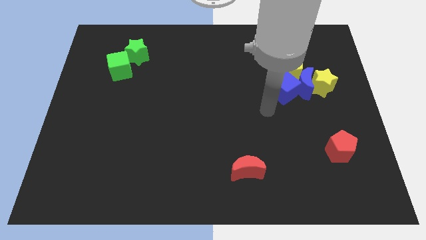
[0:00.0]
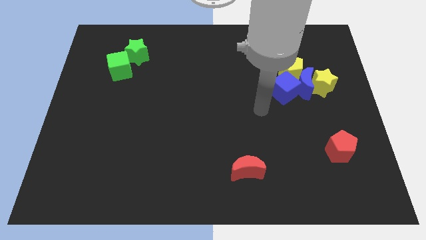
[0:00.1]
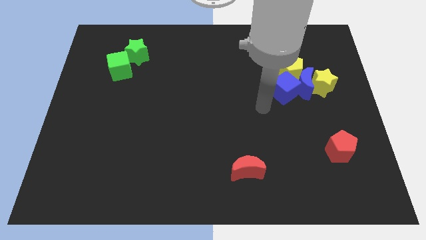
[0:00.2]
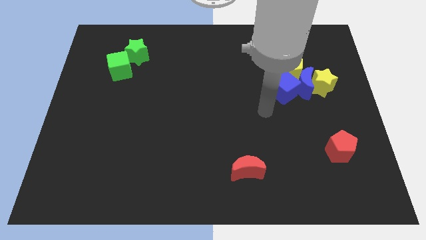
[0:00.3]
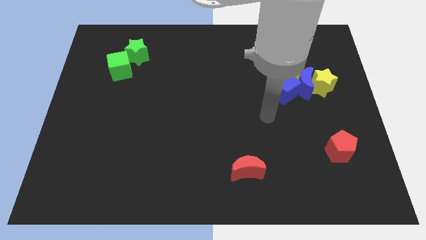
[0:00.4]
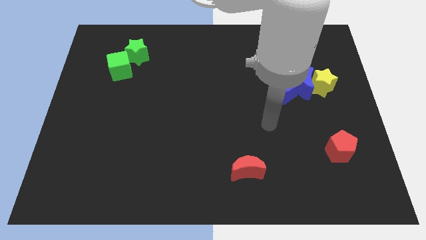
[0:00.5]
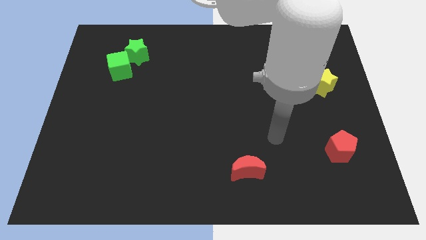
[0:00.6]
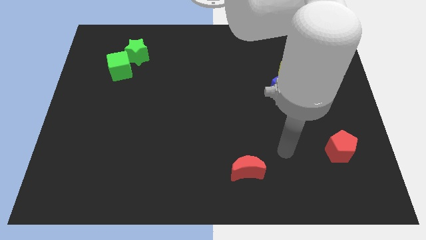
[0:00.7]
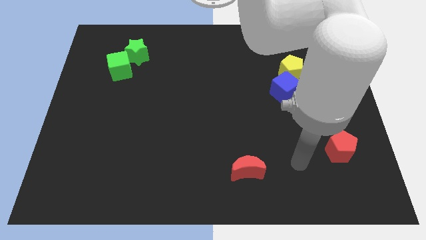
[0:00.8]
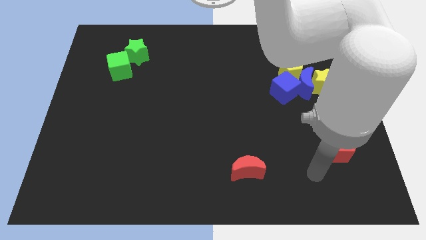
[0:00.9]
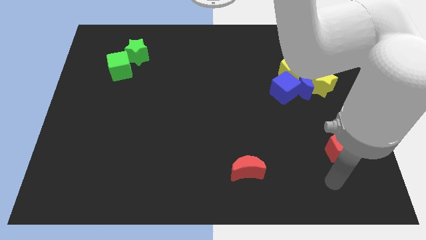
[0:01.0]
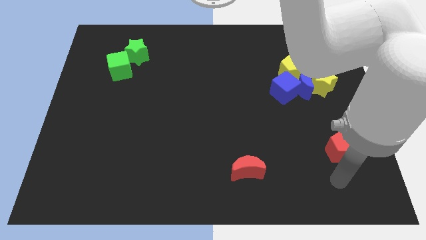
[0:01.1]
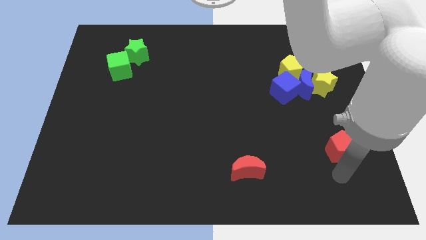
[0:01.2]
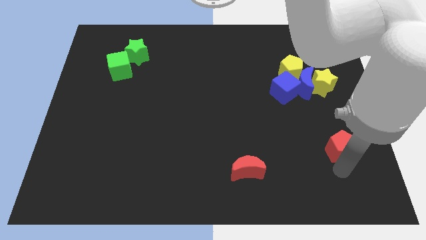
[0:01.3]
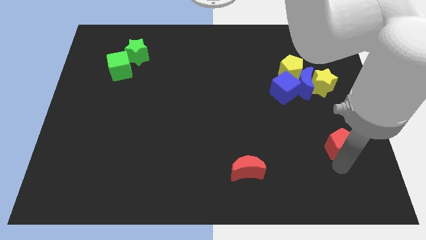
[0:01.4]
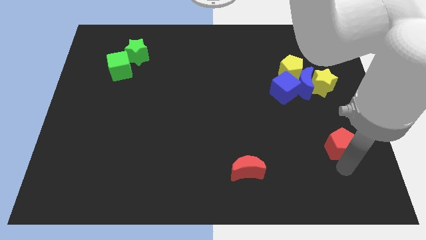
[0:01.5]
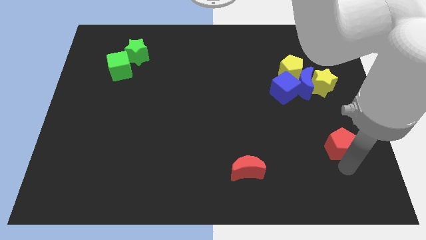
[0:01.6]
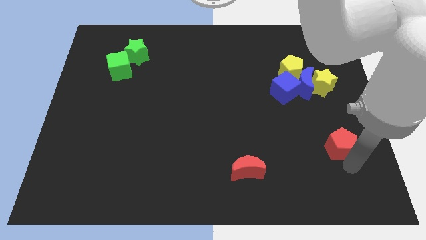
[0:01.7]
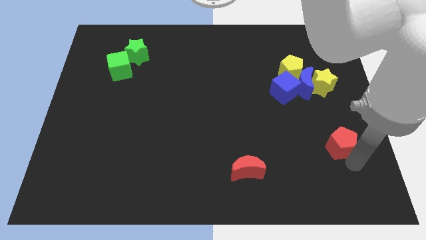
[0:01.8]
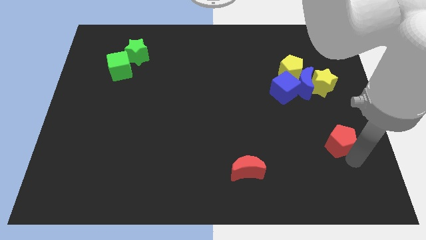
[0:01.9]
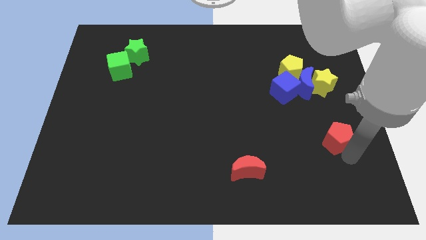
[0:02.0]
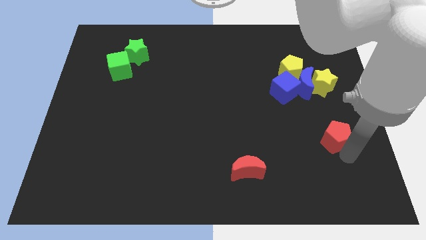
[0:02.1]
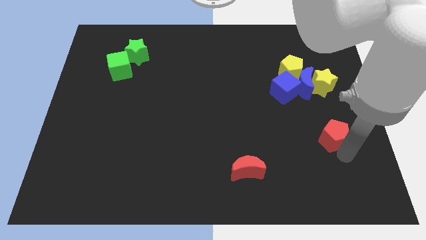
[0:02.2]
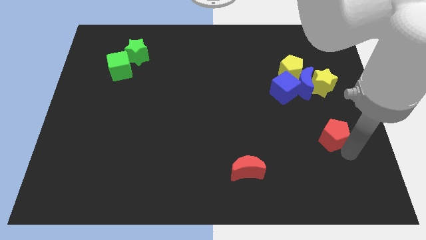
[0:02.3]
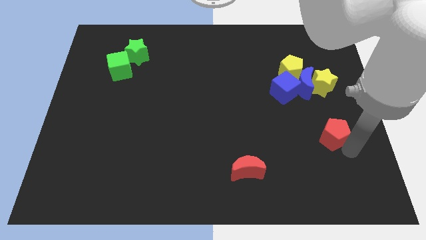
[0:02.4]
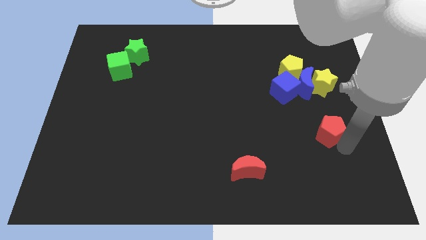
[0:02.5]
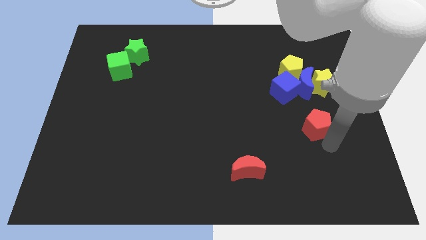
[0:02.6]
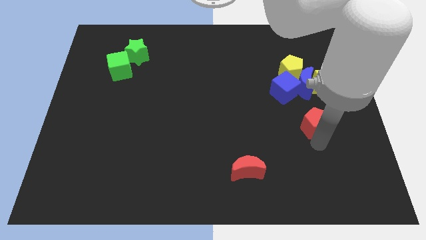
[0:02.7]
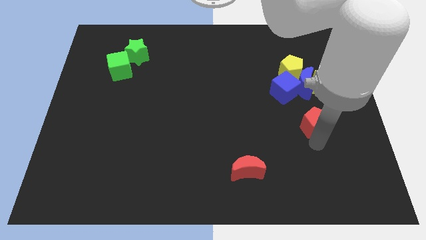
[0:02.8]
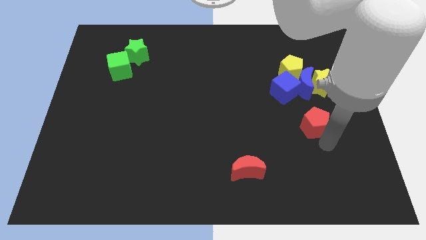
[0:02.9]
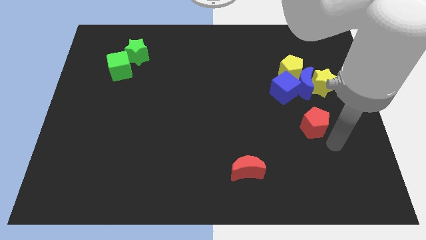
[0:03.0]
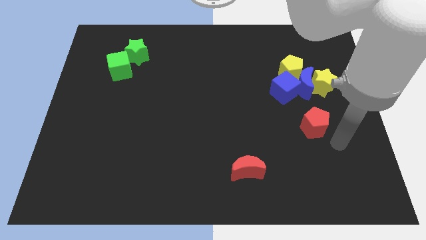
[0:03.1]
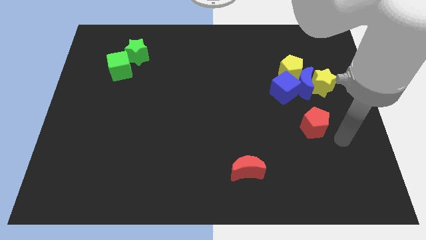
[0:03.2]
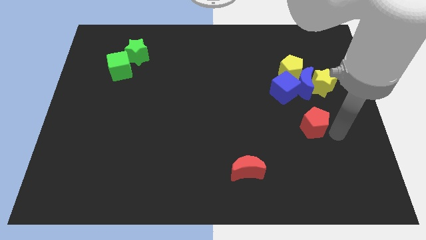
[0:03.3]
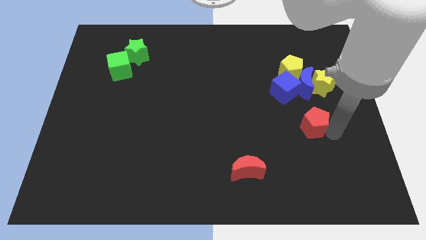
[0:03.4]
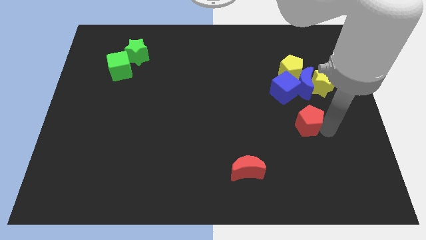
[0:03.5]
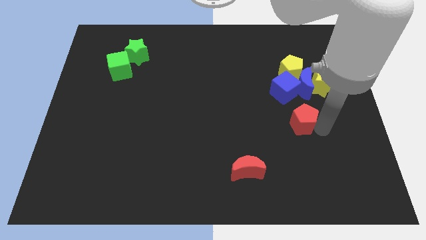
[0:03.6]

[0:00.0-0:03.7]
push the red pentagon to the bottom of the blue crescent

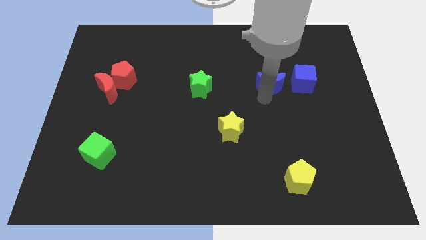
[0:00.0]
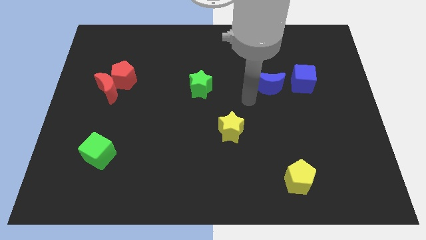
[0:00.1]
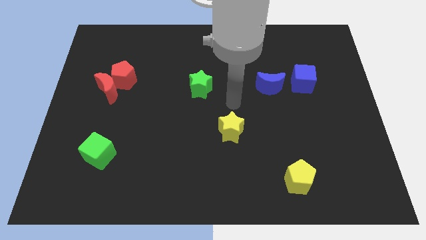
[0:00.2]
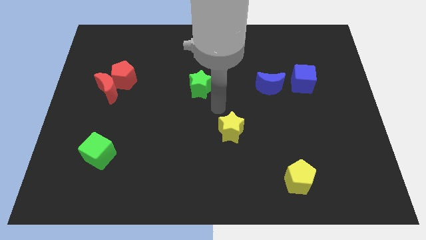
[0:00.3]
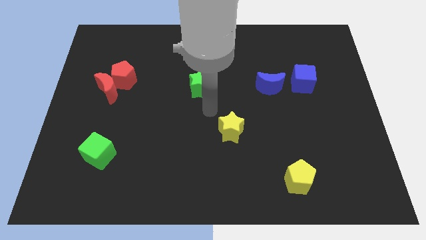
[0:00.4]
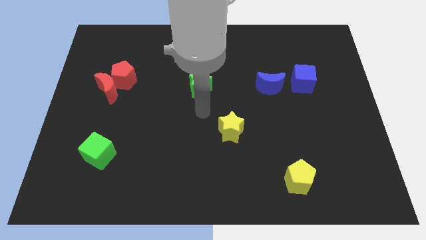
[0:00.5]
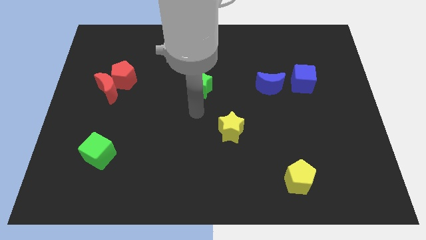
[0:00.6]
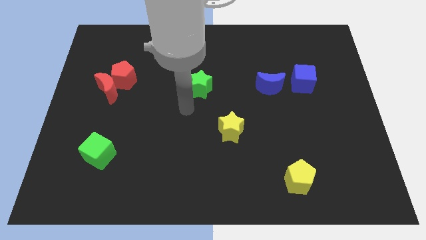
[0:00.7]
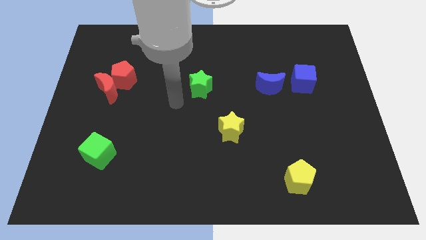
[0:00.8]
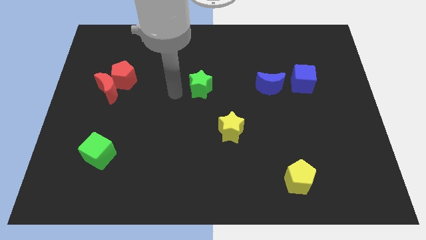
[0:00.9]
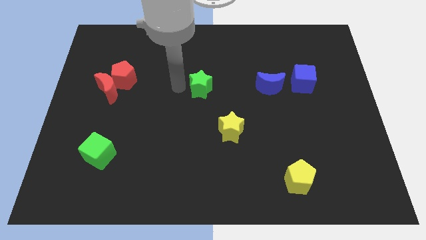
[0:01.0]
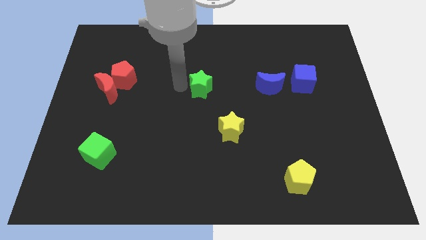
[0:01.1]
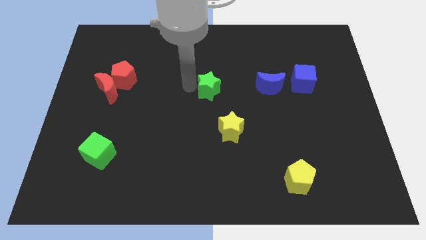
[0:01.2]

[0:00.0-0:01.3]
point your arm at the left side of the green star

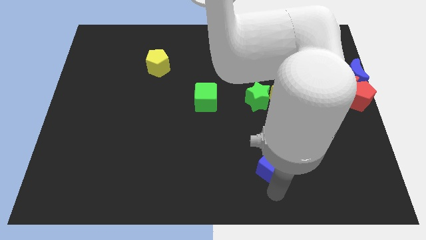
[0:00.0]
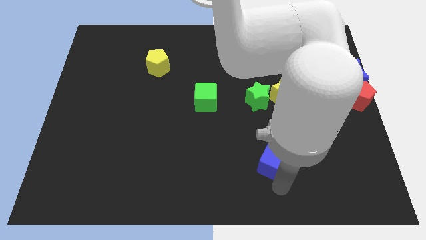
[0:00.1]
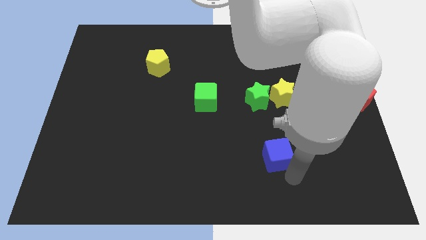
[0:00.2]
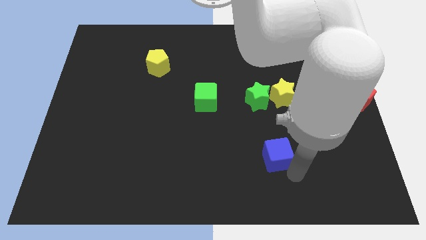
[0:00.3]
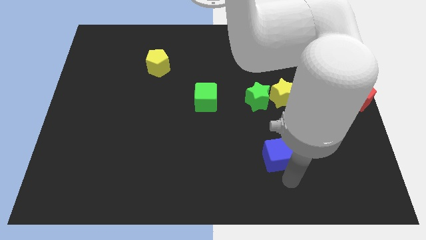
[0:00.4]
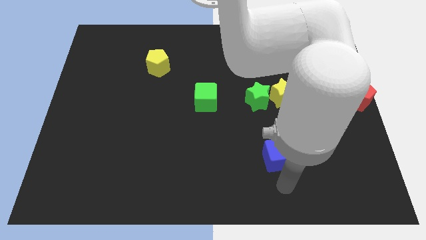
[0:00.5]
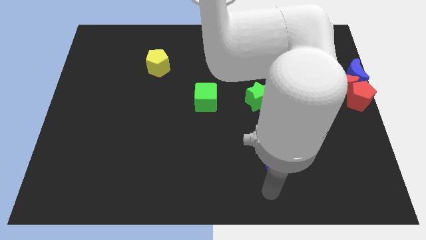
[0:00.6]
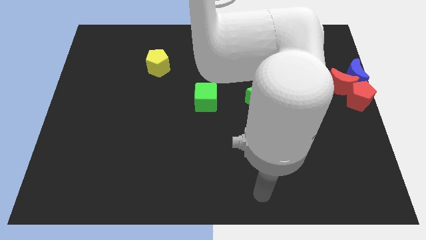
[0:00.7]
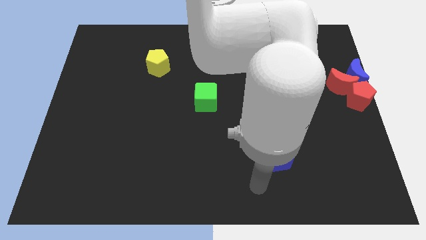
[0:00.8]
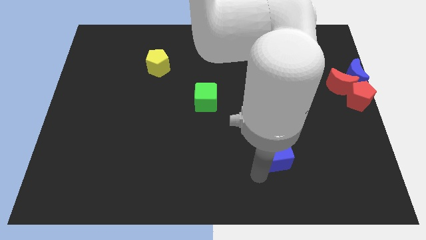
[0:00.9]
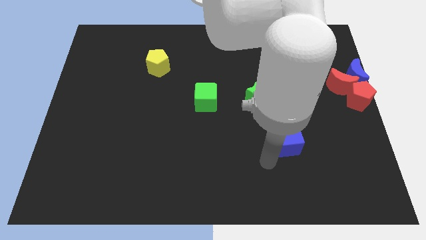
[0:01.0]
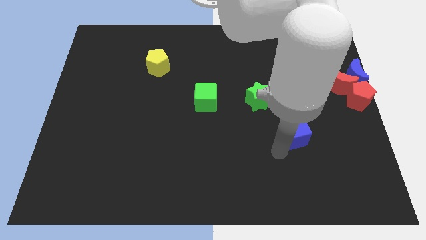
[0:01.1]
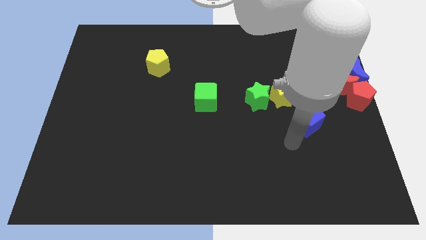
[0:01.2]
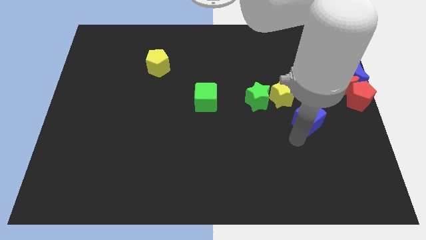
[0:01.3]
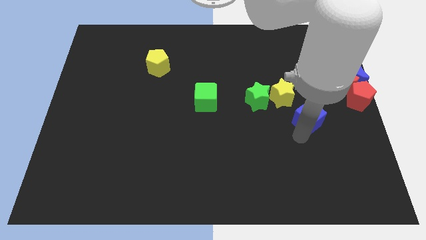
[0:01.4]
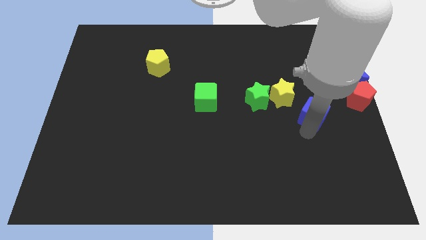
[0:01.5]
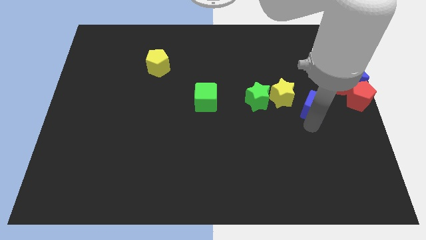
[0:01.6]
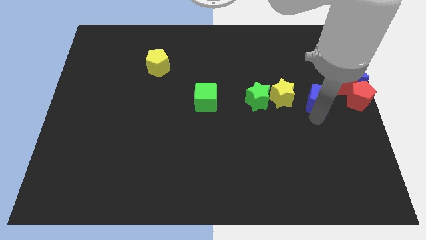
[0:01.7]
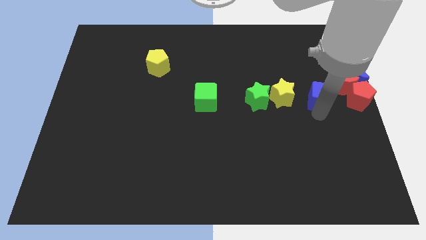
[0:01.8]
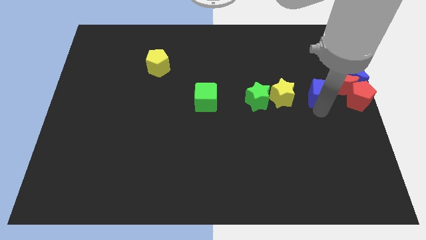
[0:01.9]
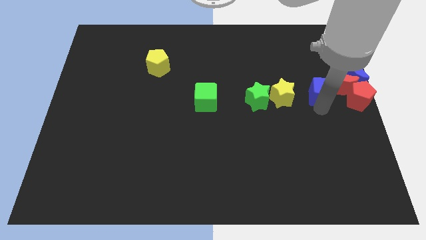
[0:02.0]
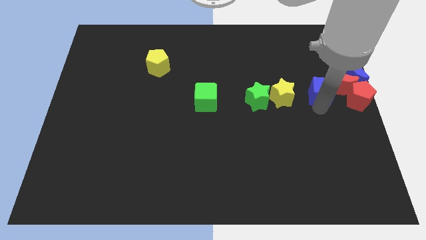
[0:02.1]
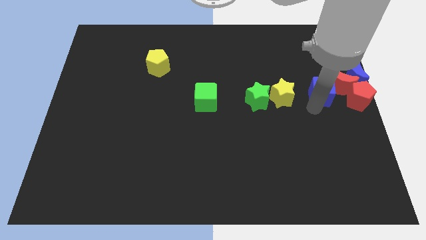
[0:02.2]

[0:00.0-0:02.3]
move the blue cube to the left side of the red pentagon

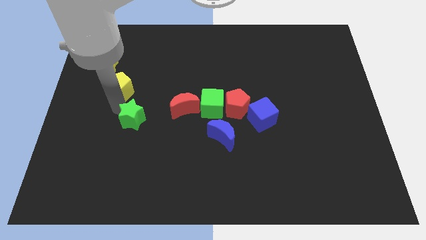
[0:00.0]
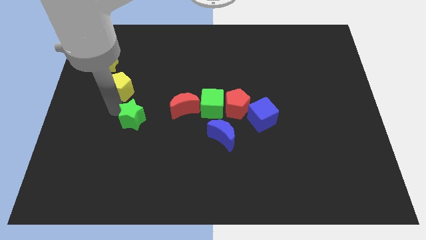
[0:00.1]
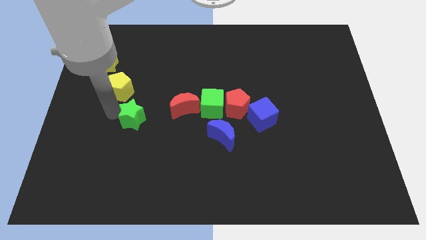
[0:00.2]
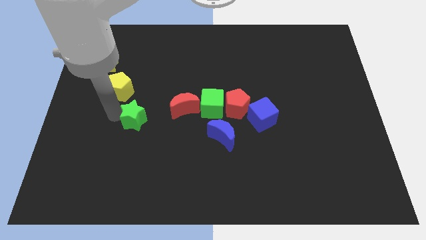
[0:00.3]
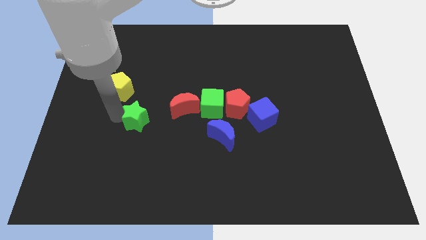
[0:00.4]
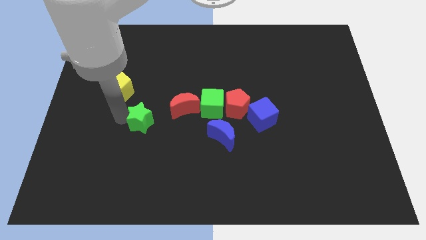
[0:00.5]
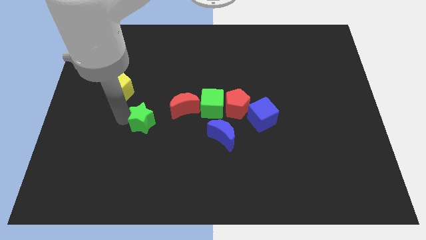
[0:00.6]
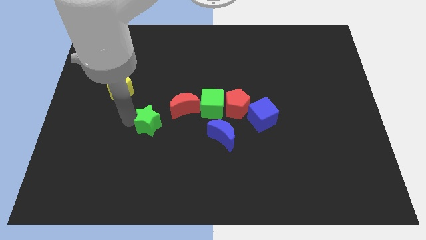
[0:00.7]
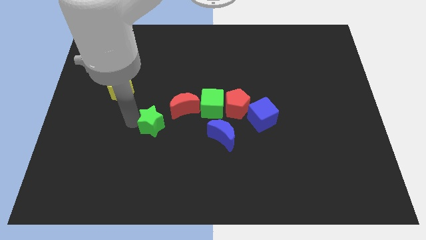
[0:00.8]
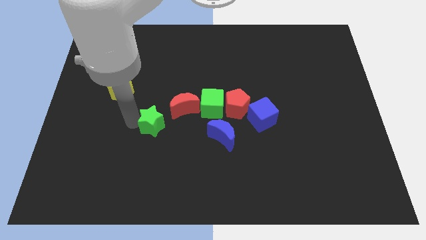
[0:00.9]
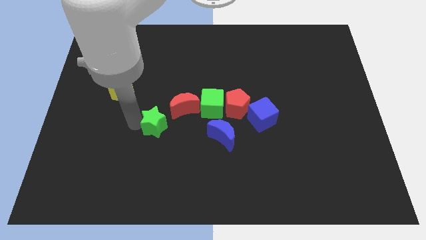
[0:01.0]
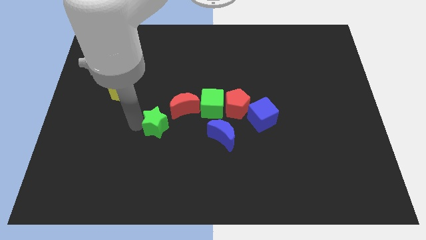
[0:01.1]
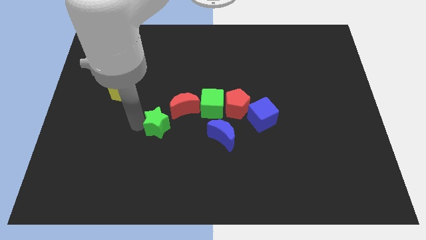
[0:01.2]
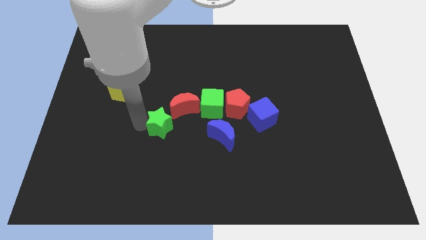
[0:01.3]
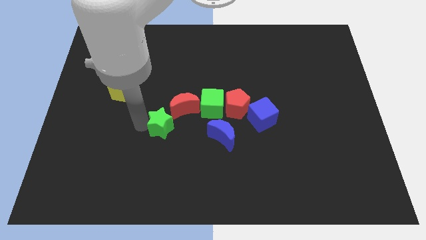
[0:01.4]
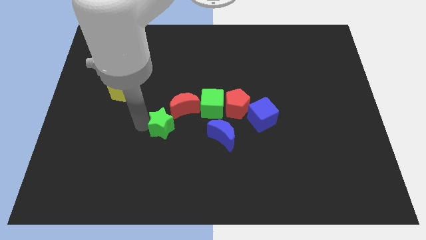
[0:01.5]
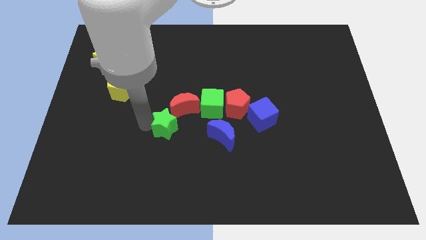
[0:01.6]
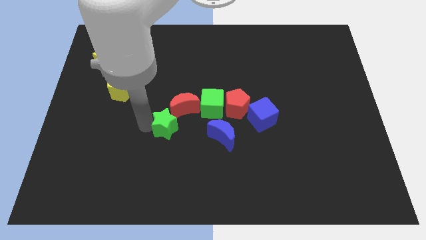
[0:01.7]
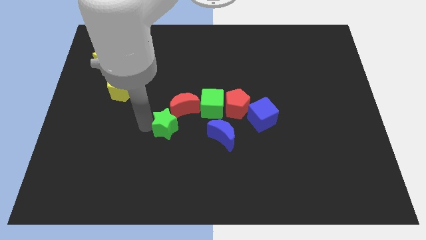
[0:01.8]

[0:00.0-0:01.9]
slide the green star diagonally to the bottom left of the red moon
